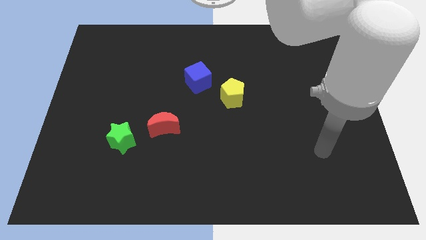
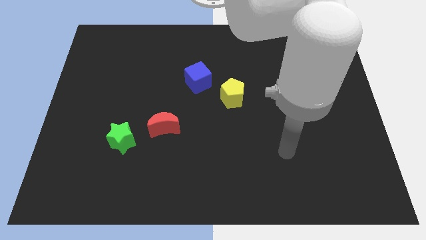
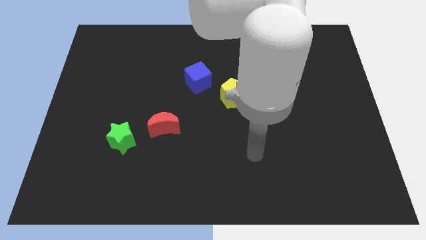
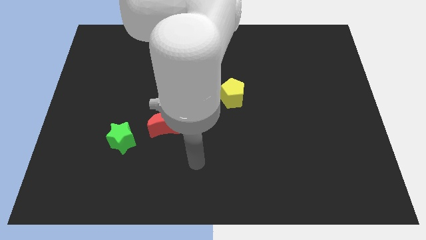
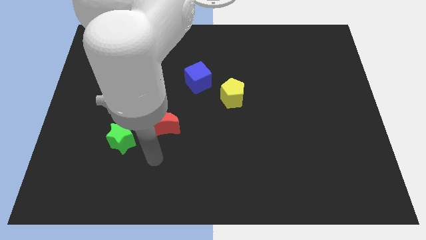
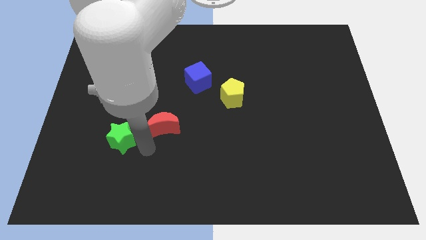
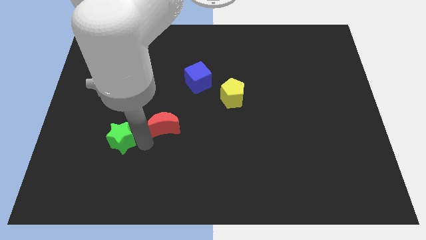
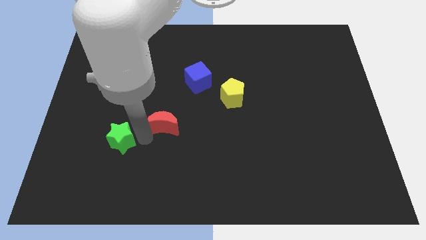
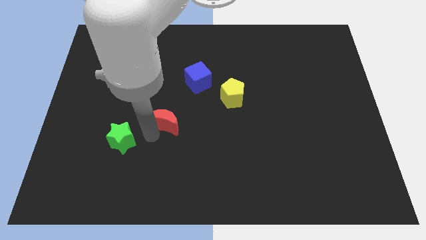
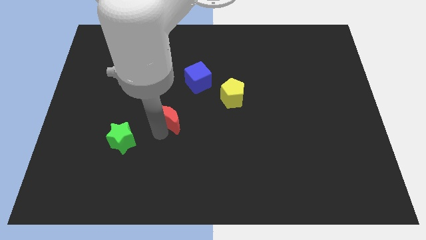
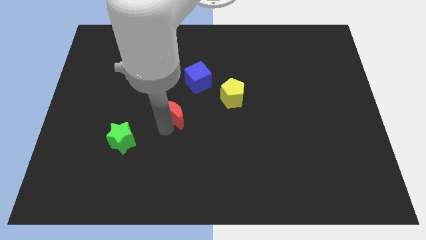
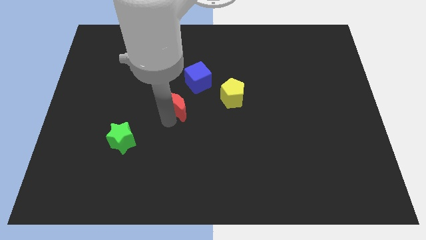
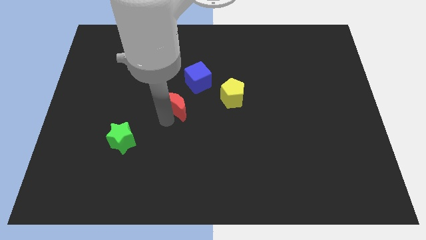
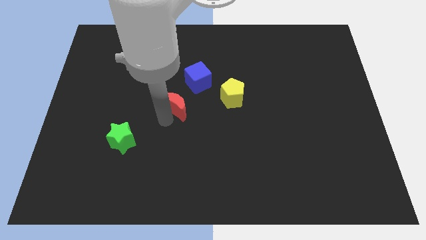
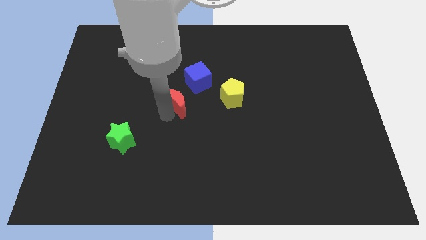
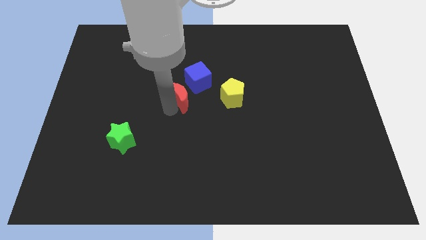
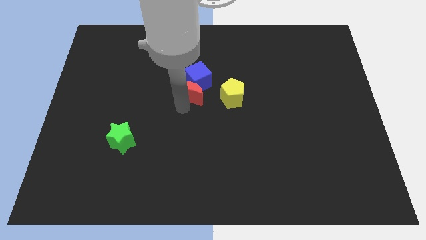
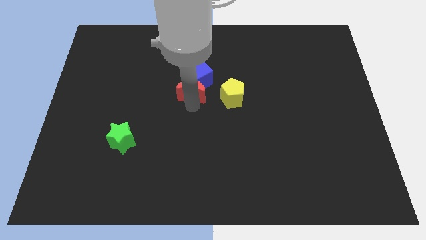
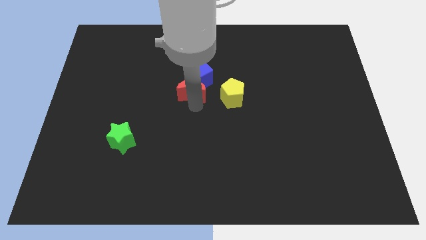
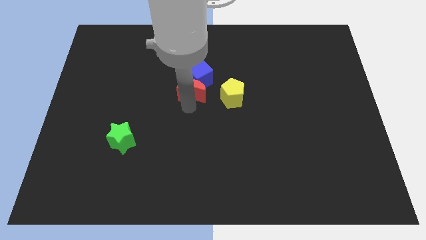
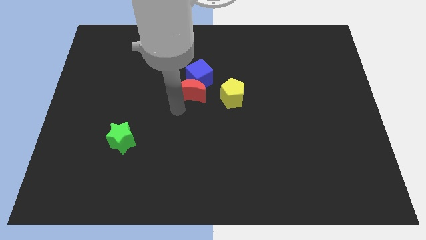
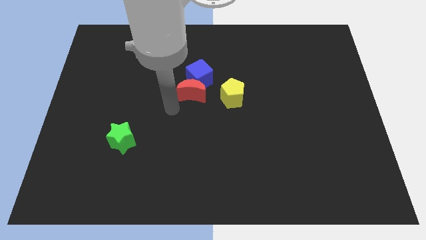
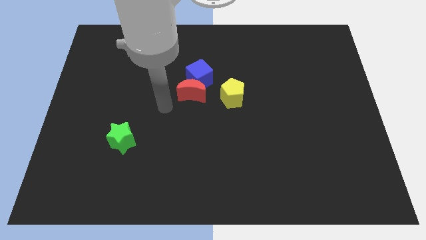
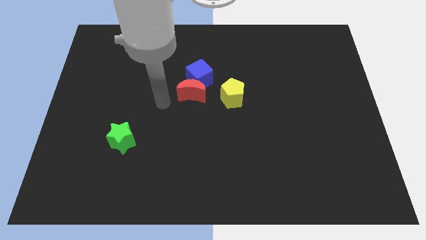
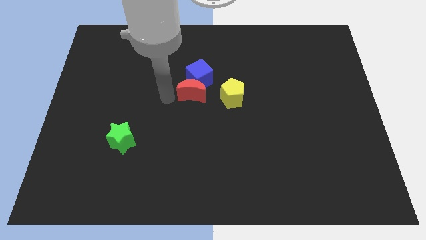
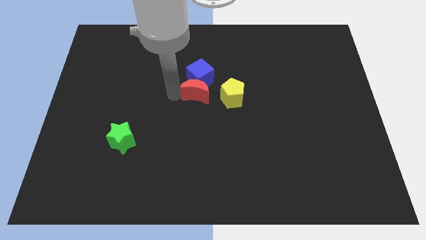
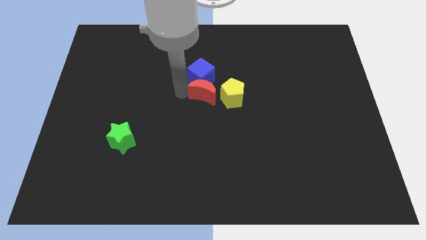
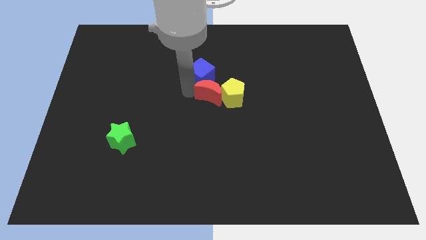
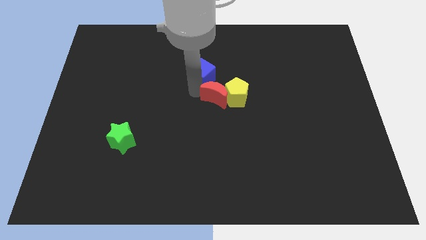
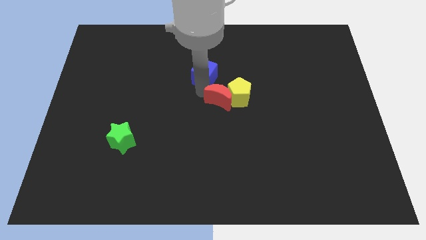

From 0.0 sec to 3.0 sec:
put the red block towards the pentagon

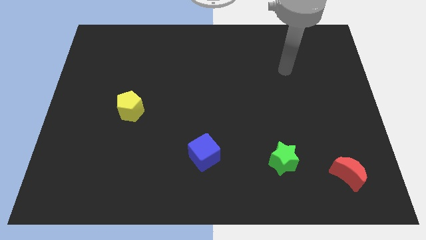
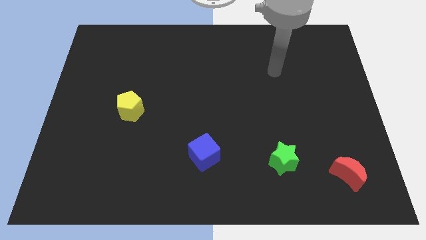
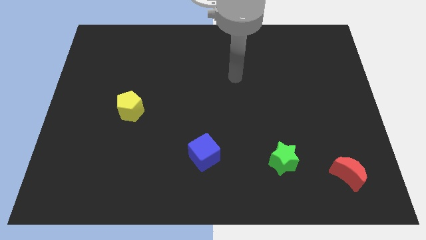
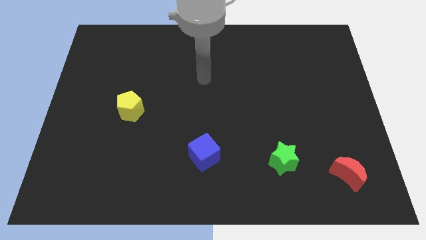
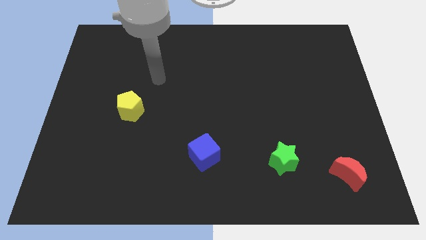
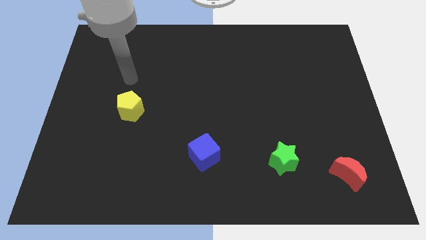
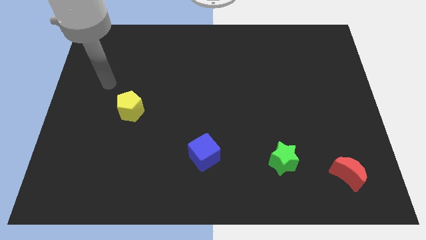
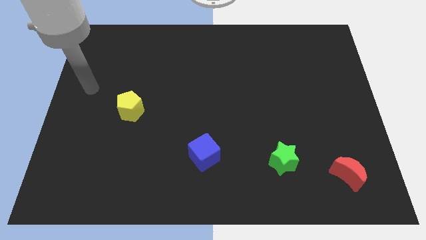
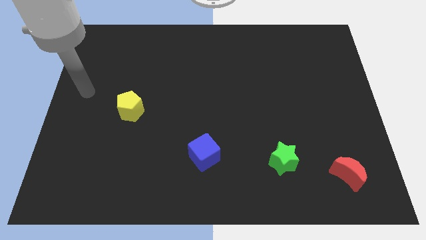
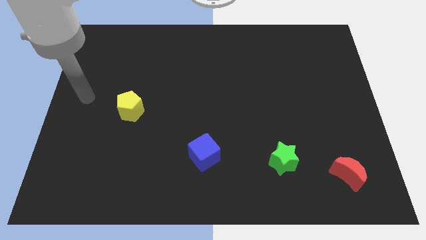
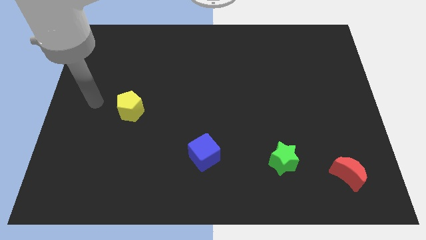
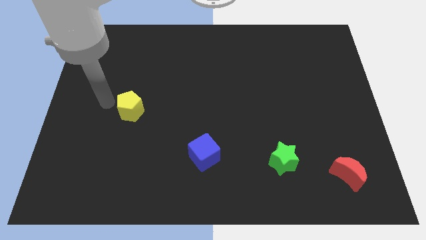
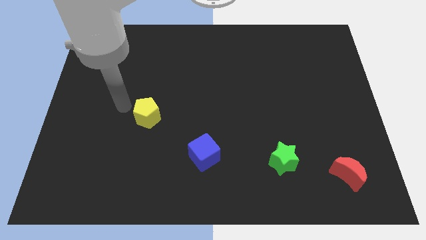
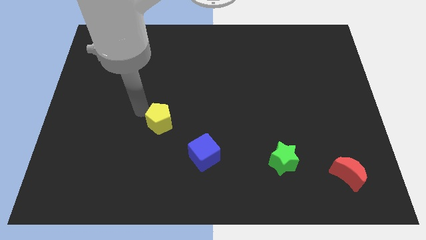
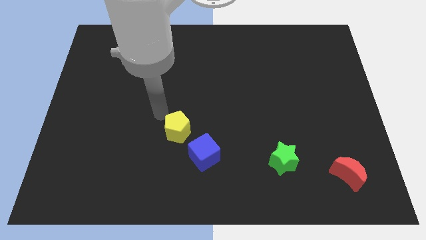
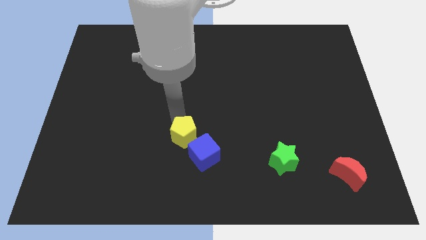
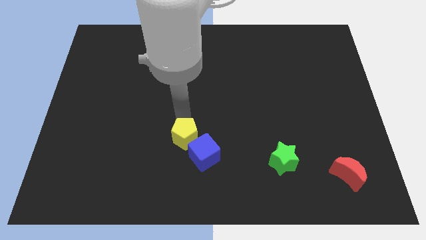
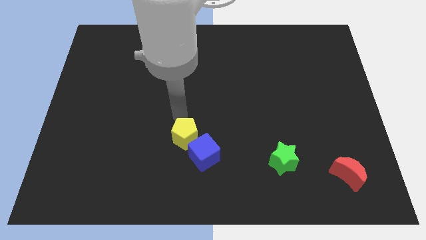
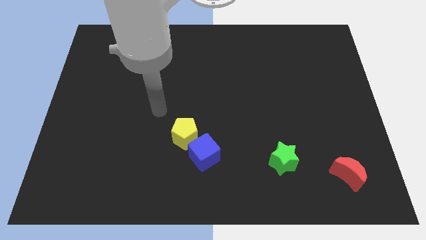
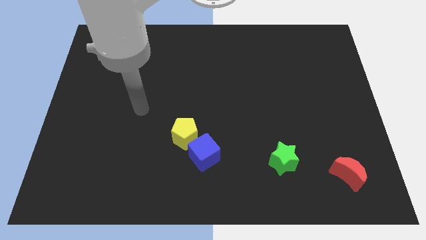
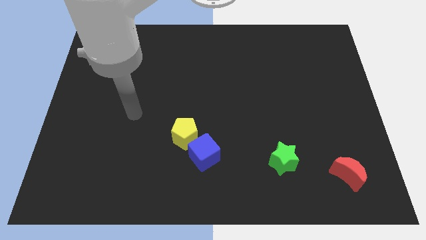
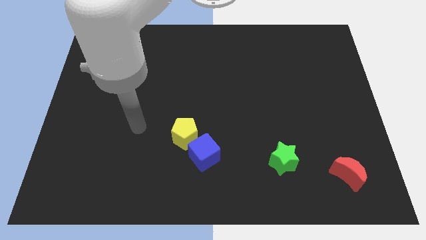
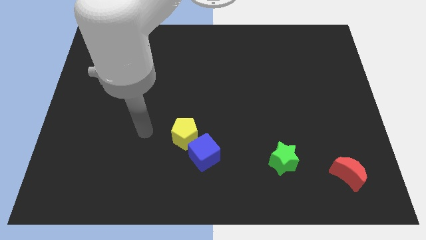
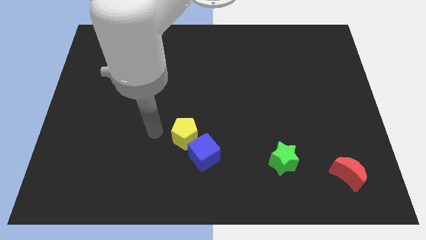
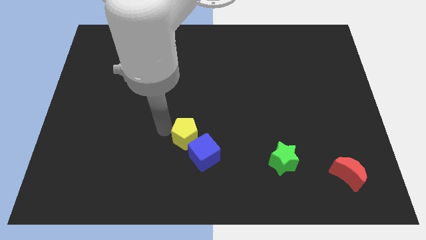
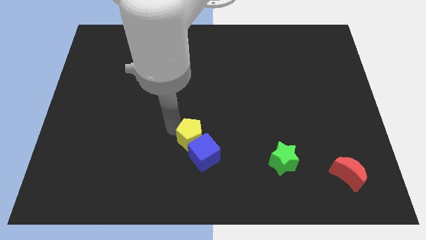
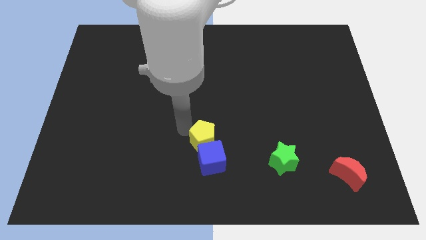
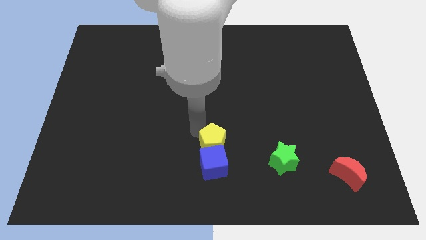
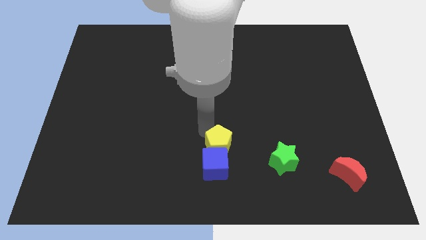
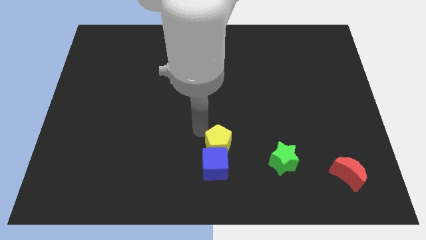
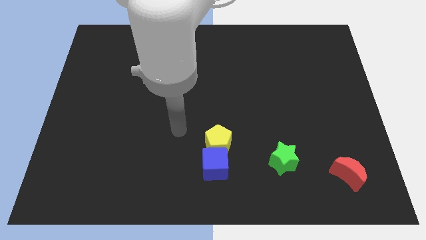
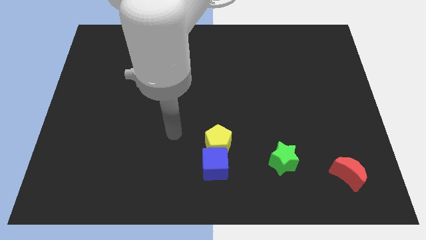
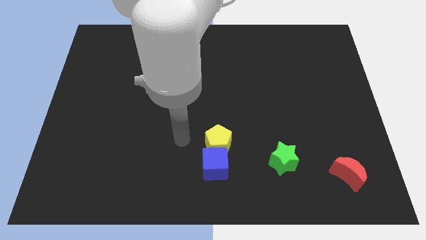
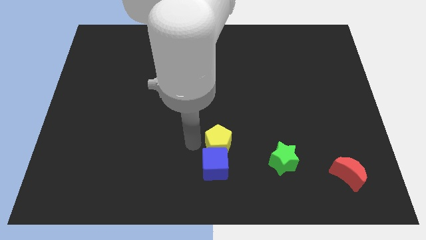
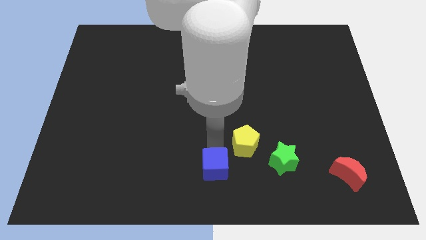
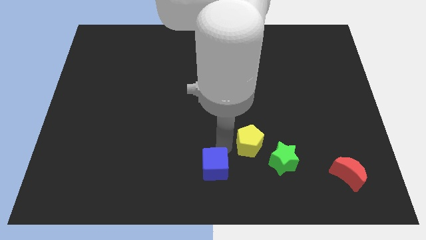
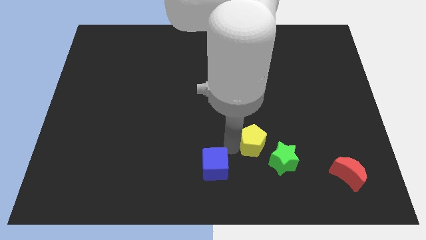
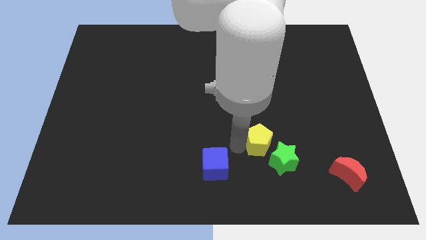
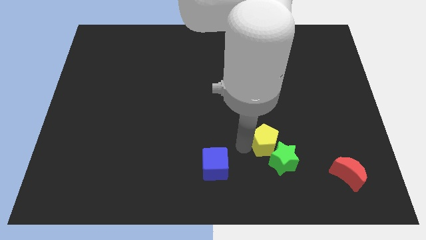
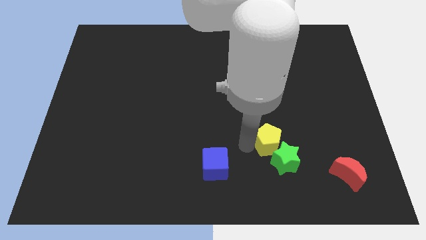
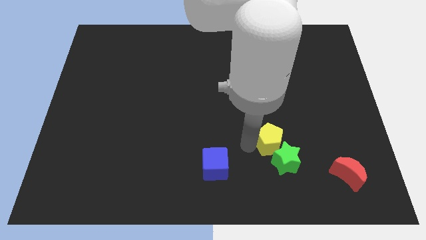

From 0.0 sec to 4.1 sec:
slide the pentagon towards the green block

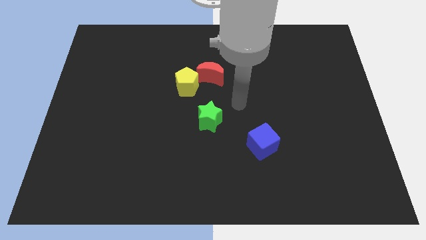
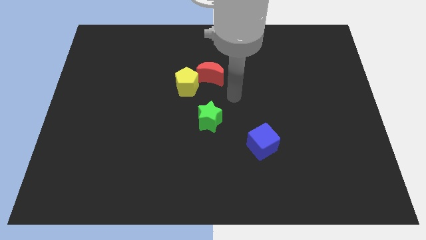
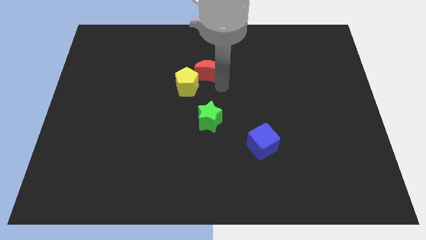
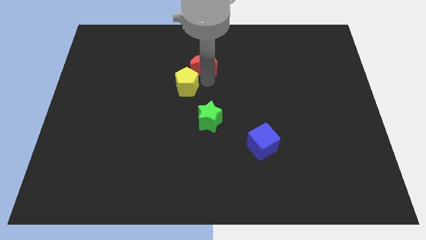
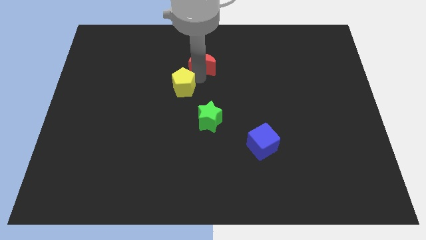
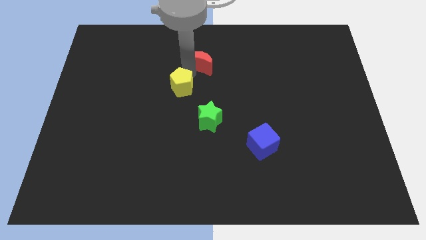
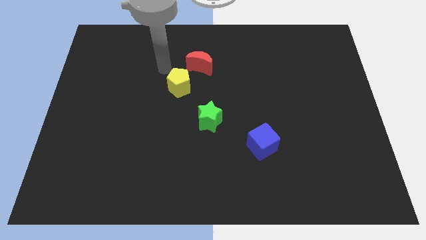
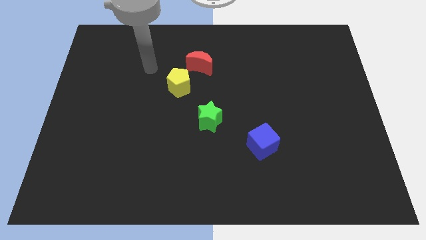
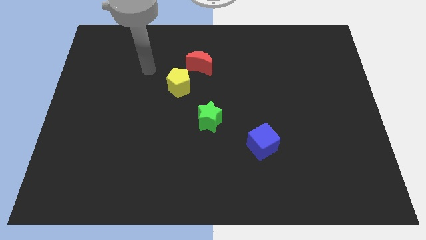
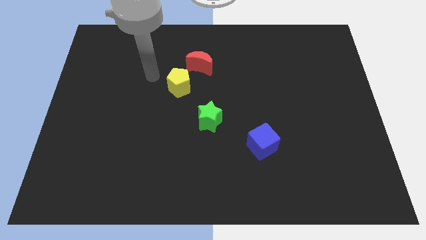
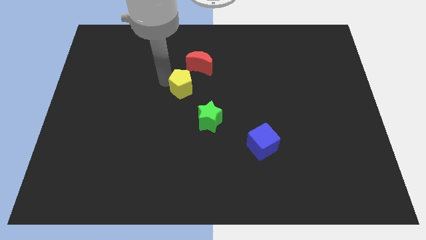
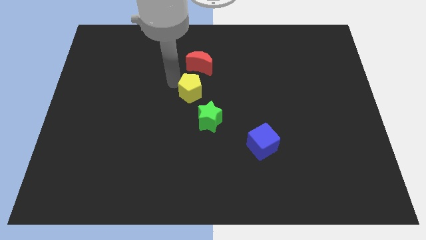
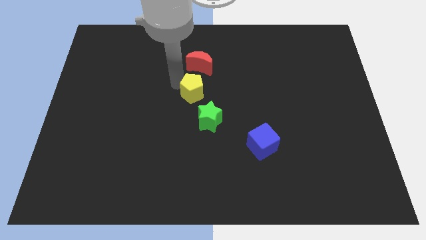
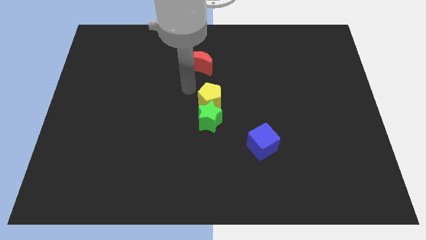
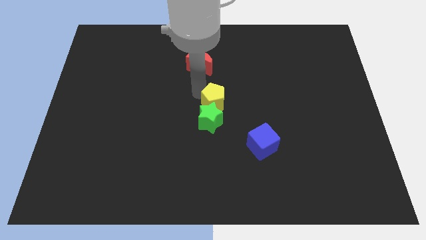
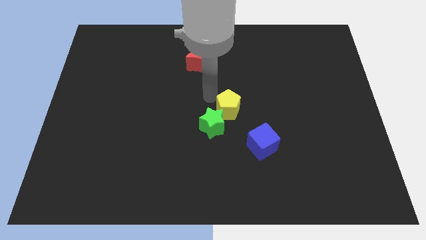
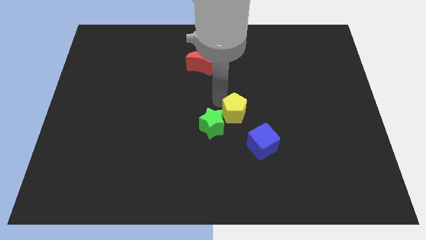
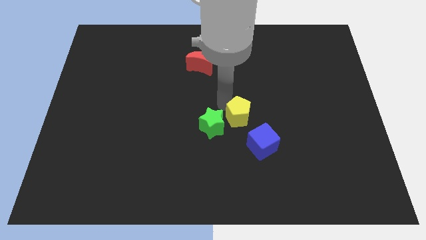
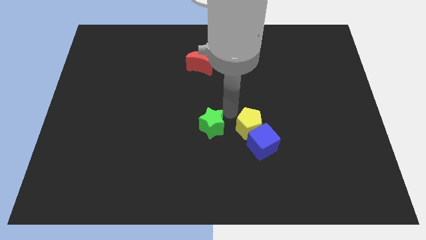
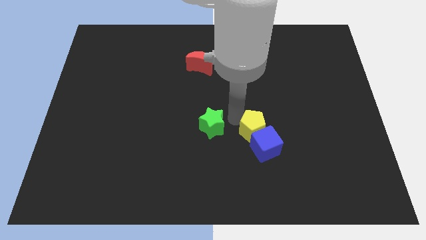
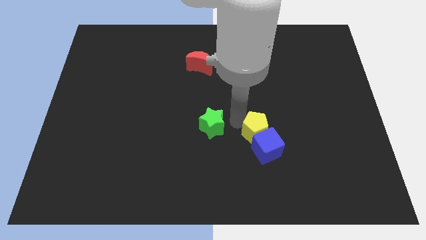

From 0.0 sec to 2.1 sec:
put the yellow block towards the blue cube
